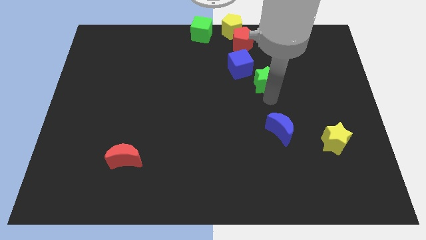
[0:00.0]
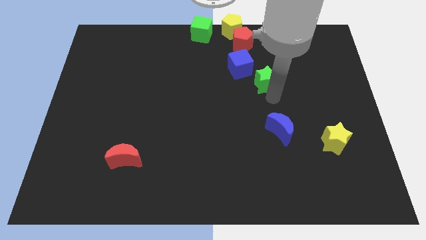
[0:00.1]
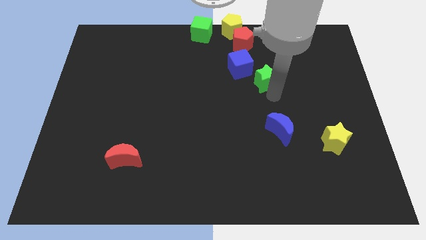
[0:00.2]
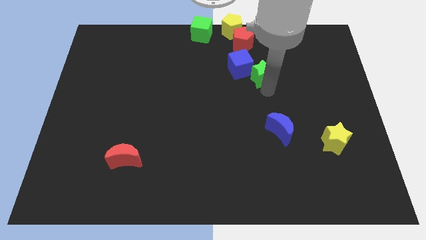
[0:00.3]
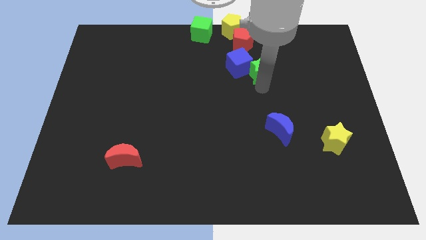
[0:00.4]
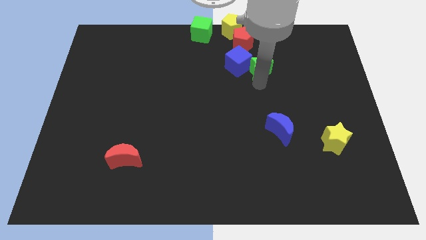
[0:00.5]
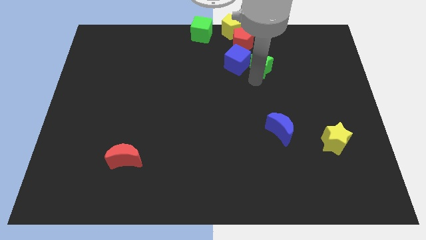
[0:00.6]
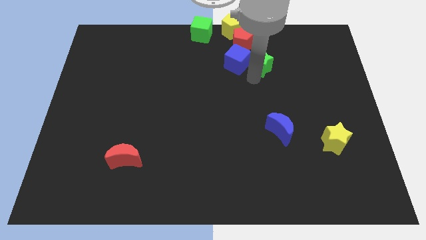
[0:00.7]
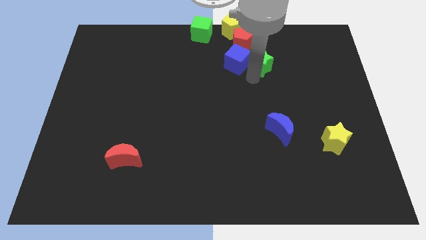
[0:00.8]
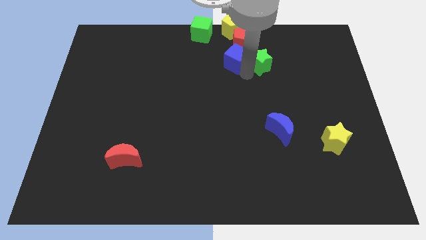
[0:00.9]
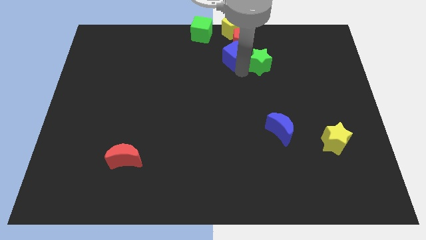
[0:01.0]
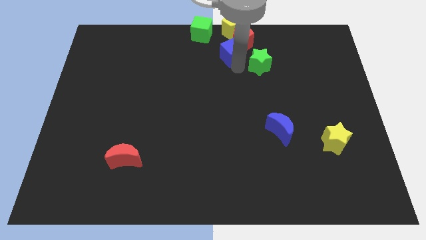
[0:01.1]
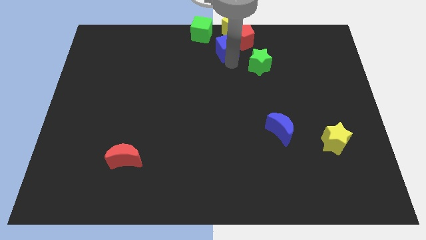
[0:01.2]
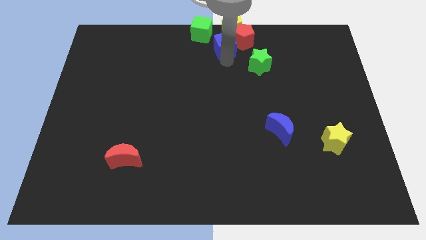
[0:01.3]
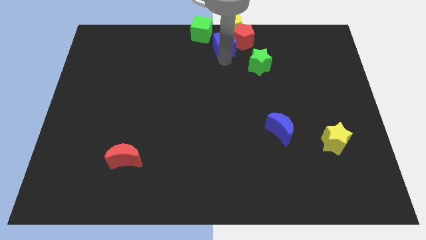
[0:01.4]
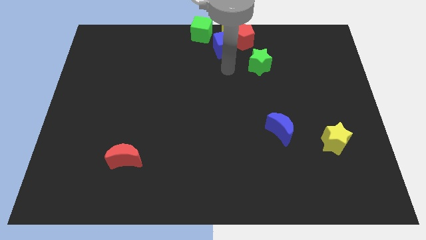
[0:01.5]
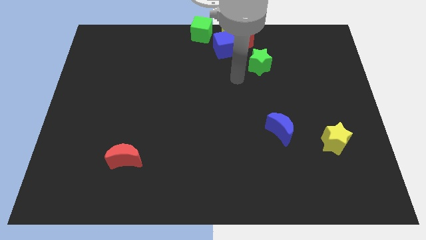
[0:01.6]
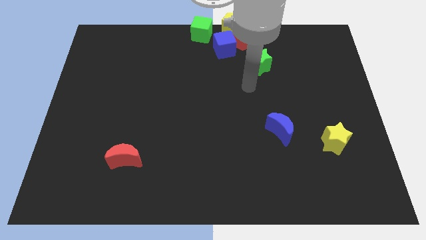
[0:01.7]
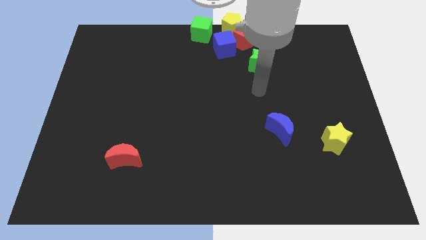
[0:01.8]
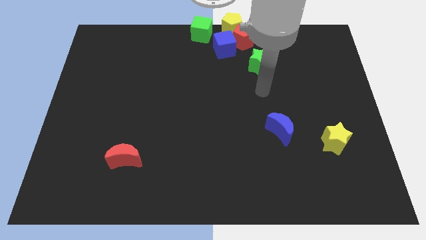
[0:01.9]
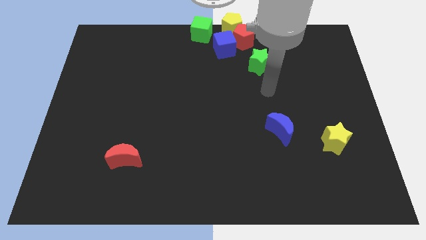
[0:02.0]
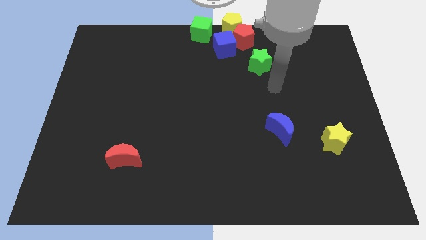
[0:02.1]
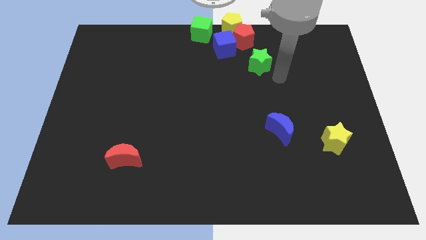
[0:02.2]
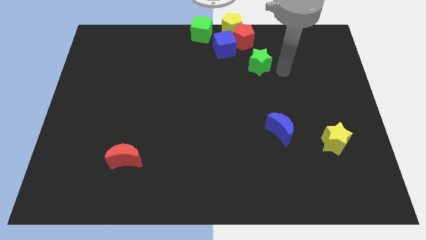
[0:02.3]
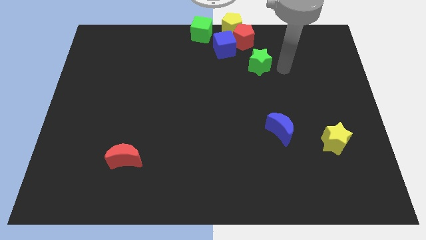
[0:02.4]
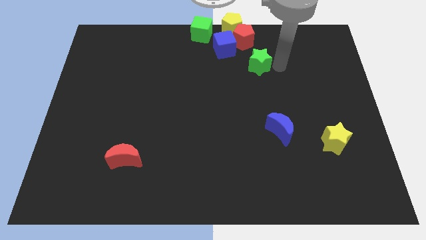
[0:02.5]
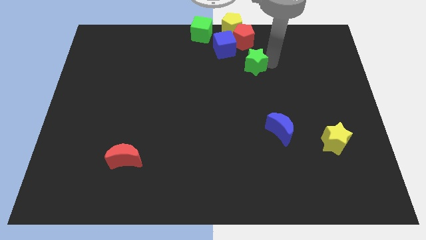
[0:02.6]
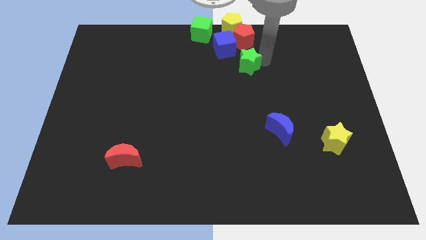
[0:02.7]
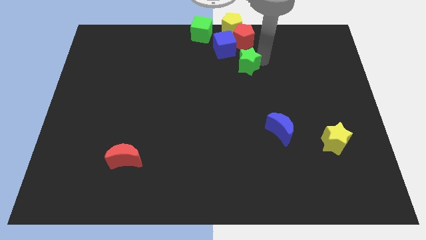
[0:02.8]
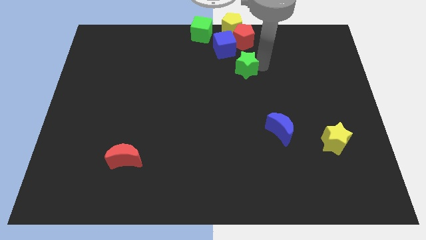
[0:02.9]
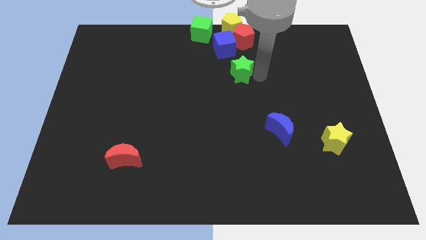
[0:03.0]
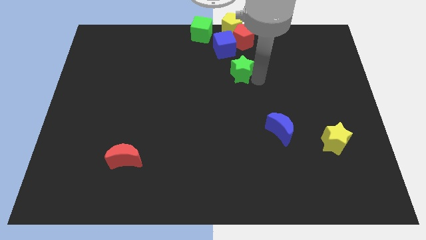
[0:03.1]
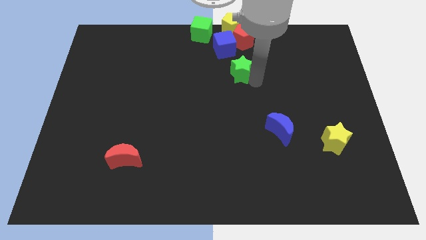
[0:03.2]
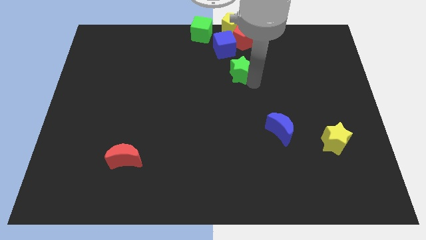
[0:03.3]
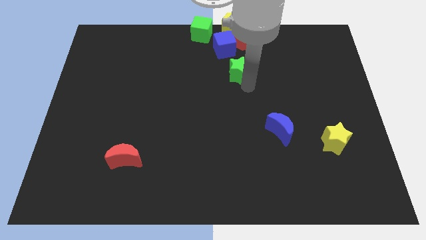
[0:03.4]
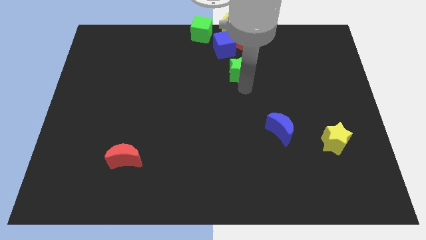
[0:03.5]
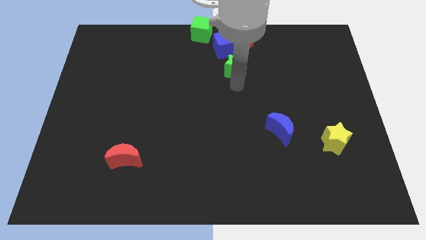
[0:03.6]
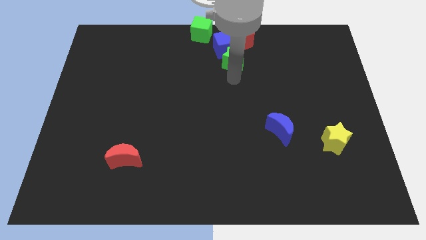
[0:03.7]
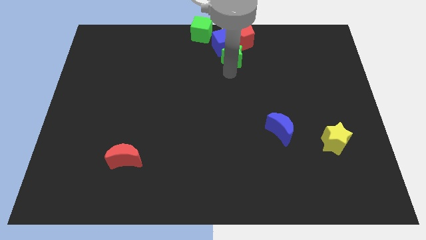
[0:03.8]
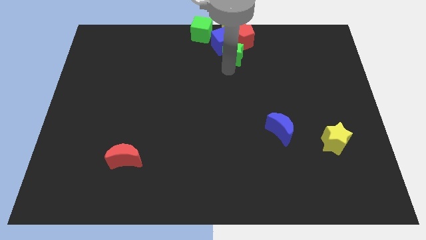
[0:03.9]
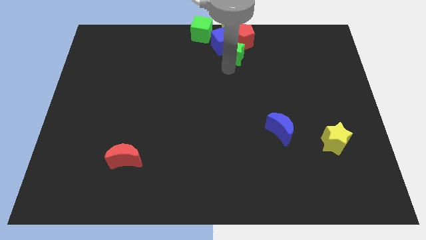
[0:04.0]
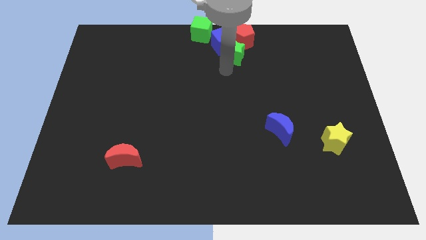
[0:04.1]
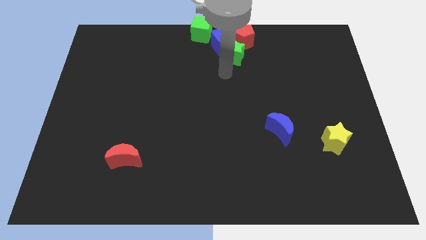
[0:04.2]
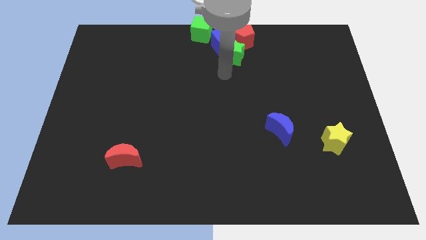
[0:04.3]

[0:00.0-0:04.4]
push the blue cube and green star into the group of blocks at the top center of the board

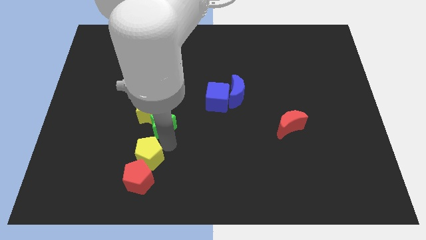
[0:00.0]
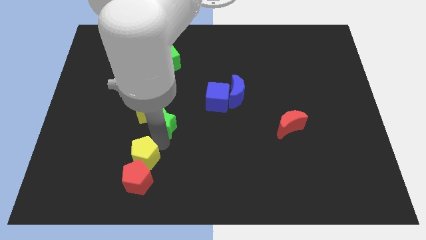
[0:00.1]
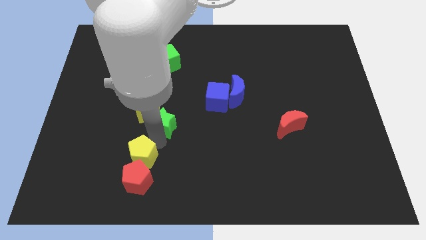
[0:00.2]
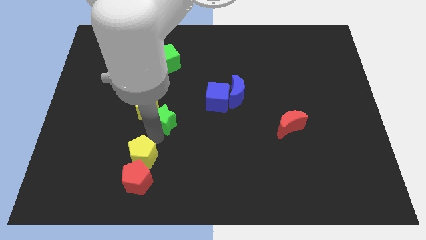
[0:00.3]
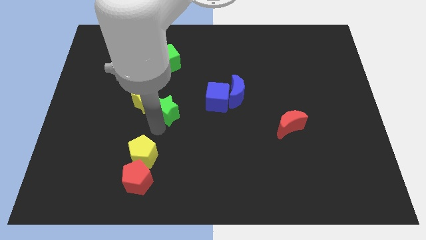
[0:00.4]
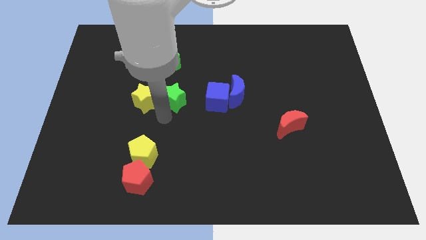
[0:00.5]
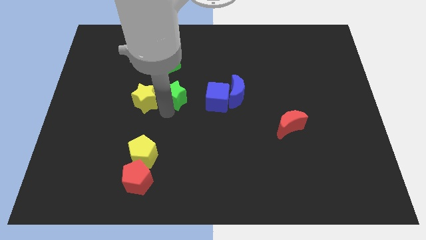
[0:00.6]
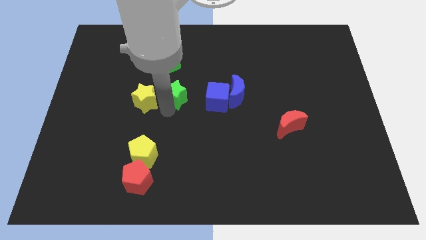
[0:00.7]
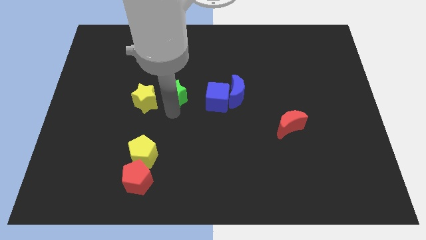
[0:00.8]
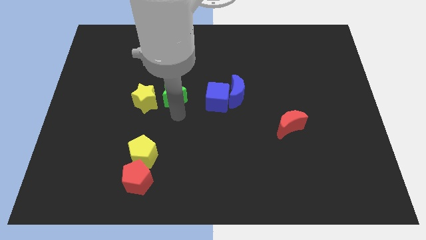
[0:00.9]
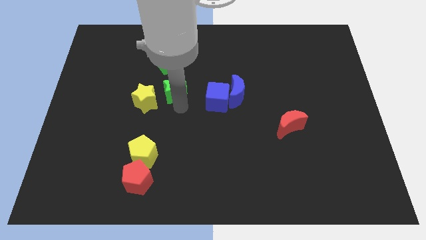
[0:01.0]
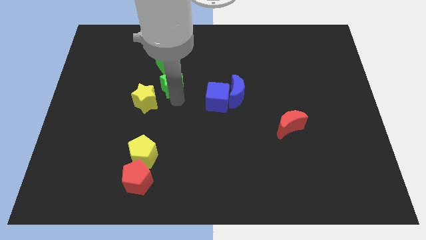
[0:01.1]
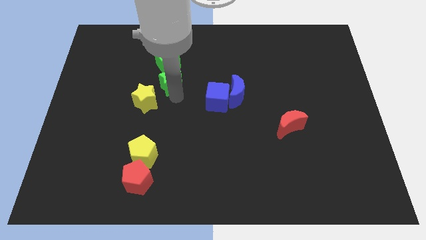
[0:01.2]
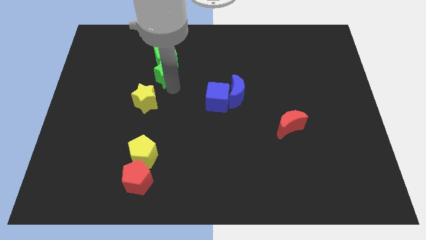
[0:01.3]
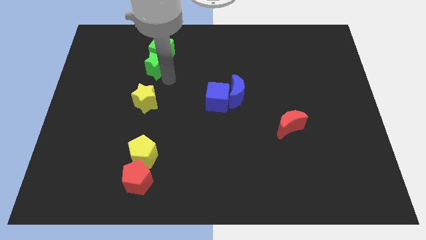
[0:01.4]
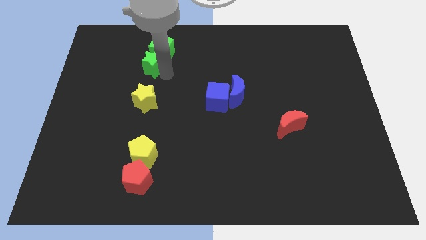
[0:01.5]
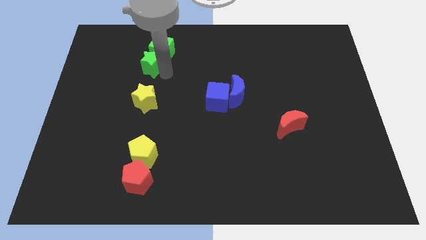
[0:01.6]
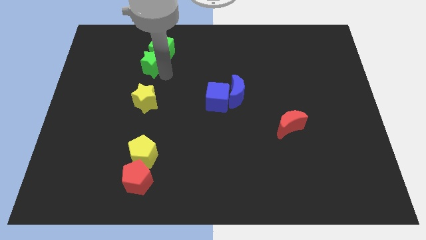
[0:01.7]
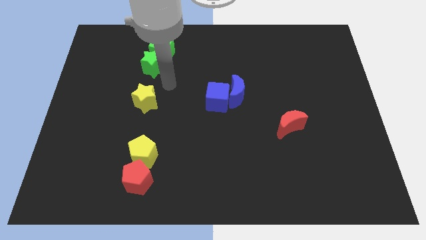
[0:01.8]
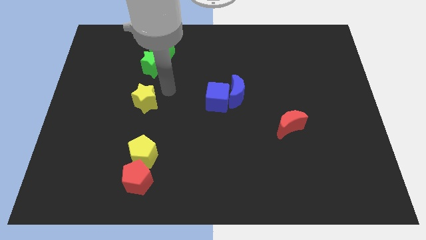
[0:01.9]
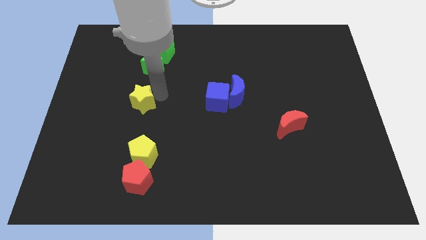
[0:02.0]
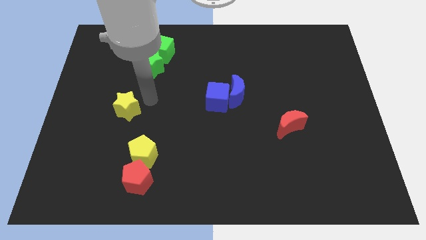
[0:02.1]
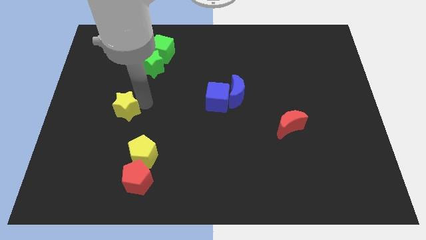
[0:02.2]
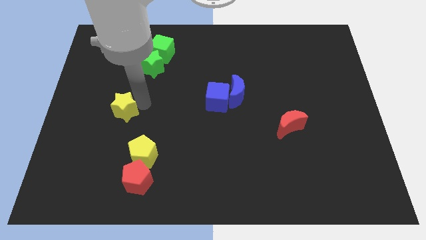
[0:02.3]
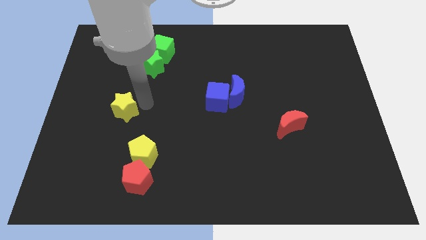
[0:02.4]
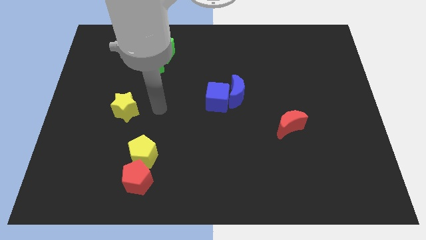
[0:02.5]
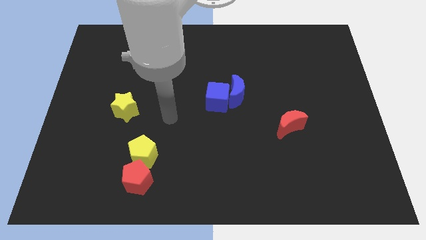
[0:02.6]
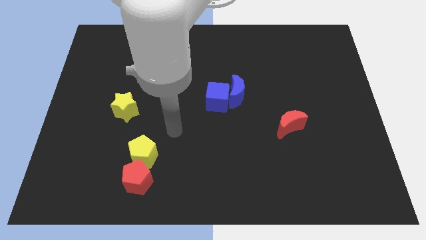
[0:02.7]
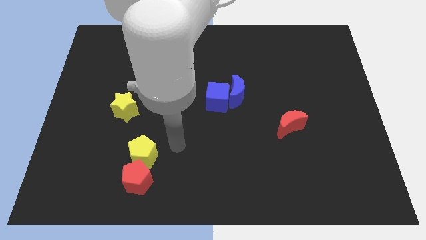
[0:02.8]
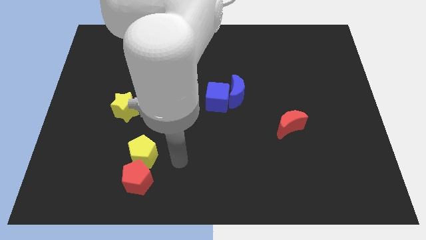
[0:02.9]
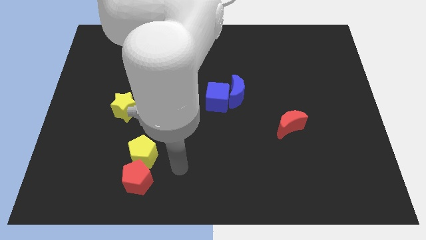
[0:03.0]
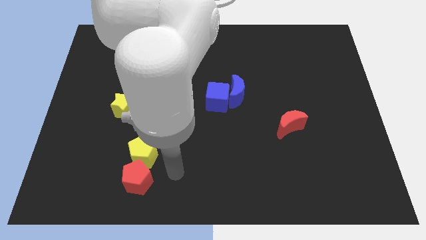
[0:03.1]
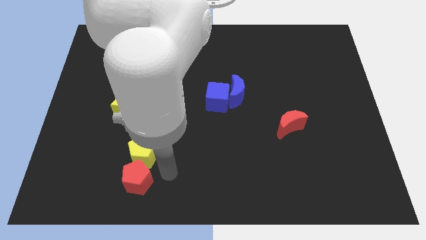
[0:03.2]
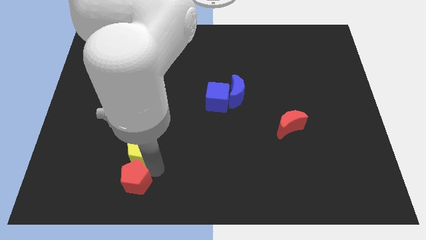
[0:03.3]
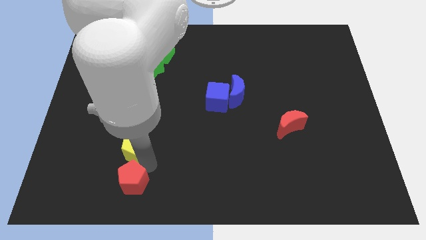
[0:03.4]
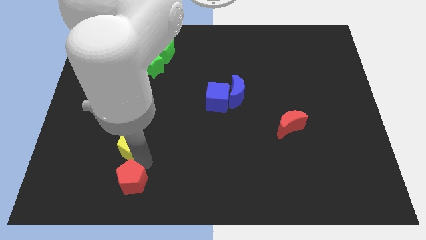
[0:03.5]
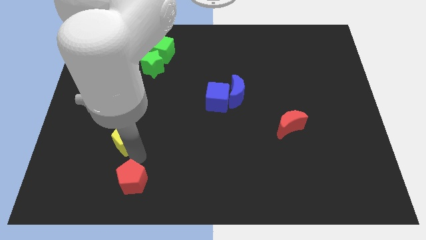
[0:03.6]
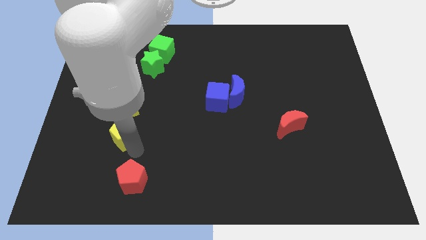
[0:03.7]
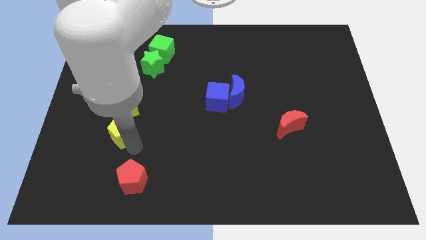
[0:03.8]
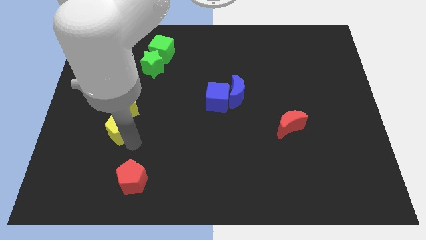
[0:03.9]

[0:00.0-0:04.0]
push the green star into the green cube

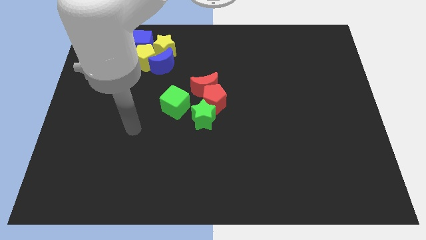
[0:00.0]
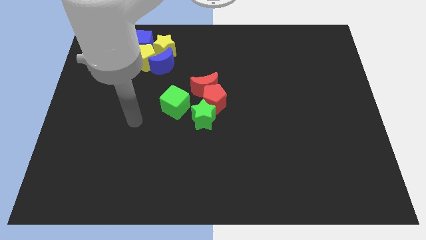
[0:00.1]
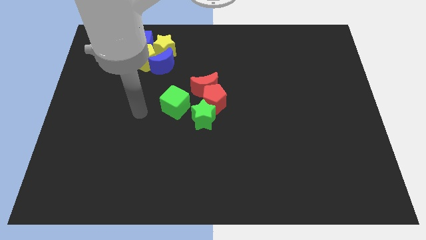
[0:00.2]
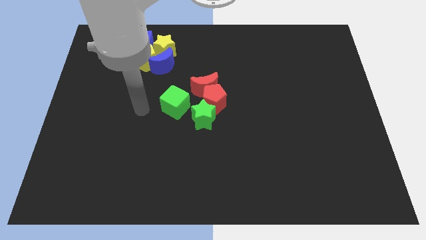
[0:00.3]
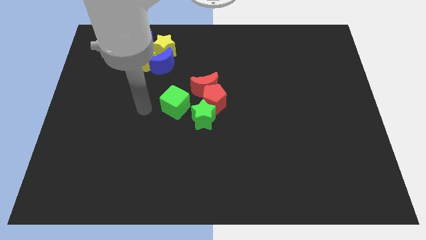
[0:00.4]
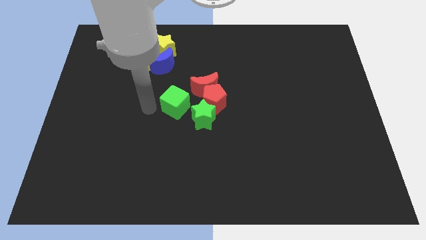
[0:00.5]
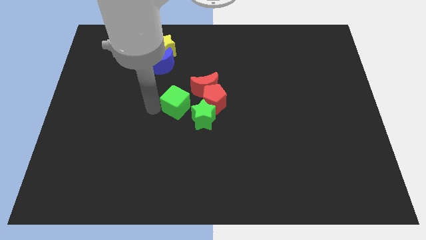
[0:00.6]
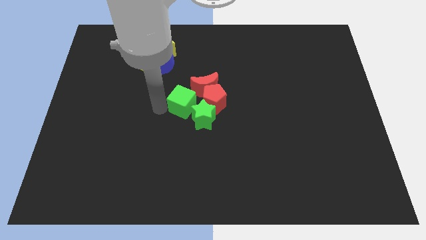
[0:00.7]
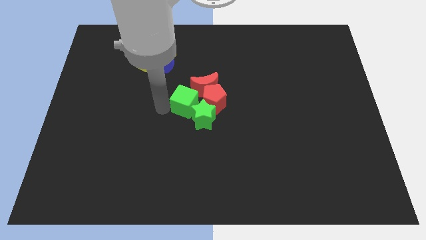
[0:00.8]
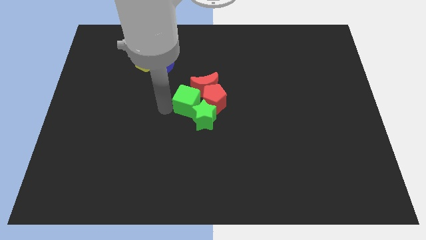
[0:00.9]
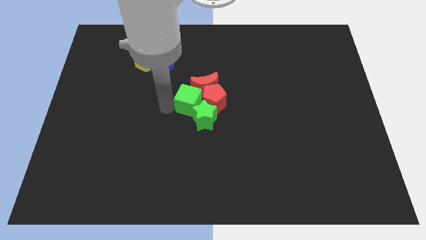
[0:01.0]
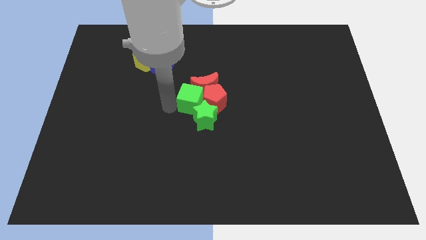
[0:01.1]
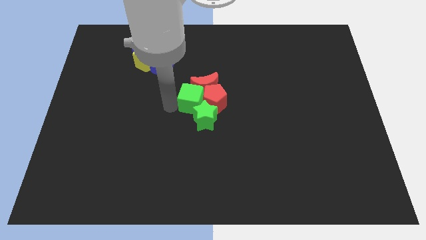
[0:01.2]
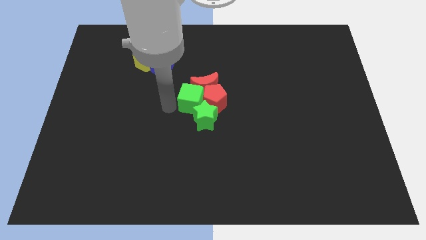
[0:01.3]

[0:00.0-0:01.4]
push the green cube into the group of blocks
